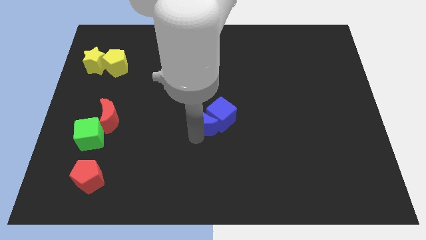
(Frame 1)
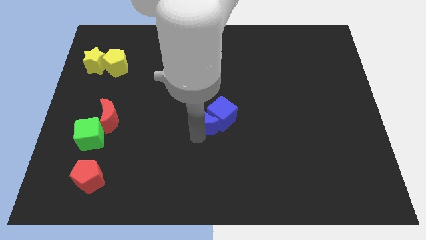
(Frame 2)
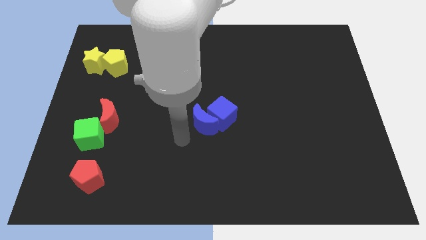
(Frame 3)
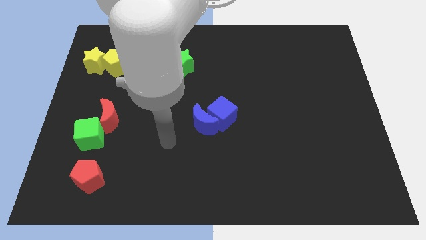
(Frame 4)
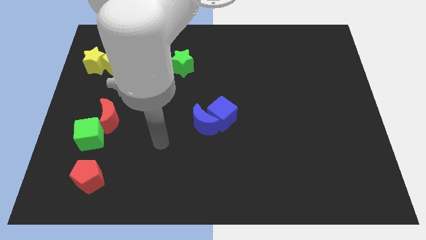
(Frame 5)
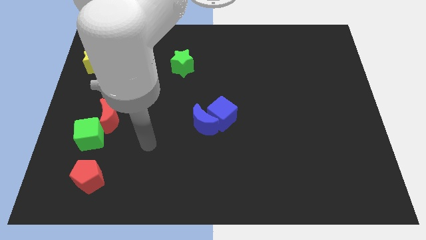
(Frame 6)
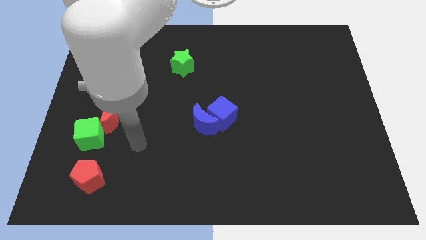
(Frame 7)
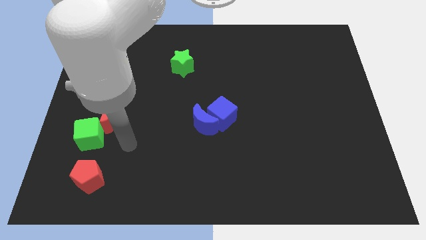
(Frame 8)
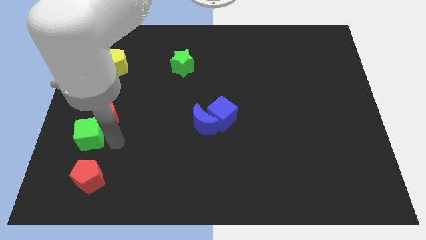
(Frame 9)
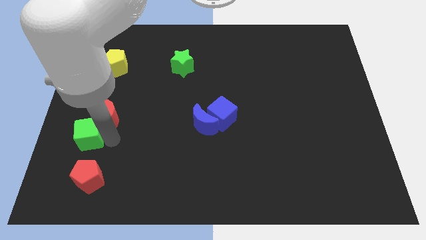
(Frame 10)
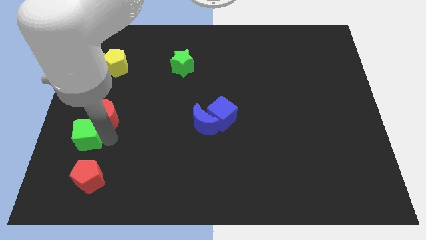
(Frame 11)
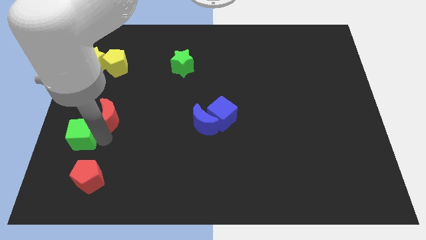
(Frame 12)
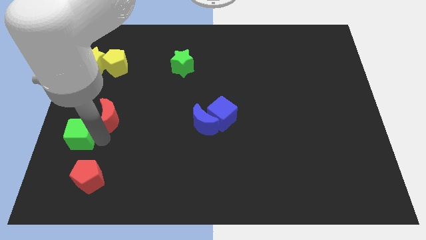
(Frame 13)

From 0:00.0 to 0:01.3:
slide the green cube towards the left side of the board

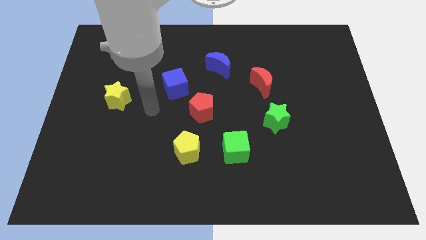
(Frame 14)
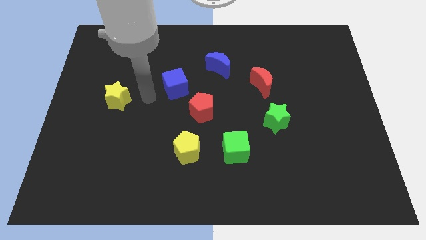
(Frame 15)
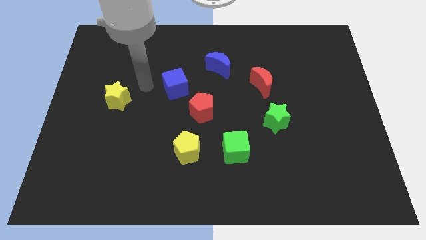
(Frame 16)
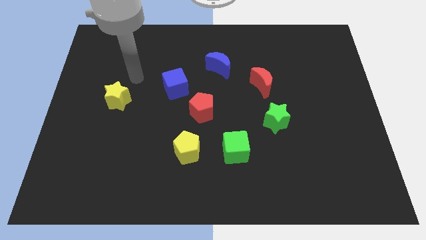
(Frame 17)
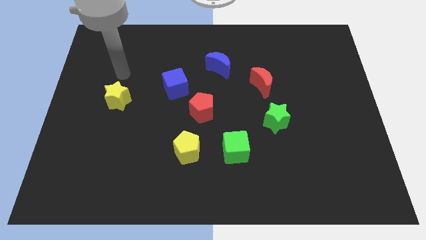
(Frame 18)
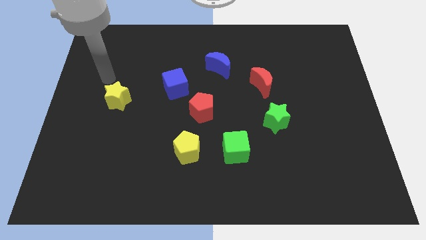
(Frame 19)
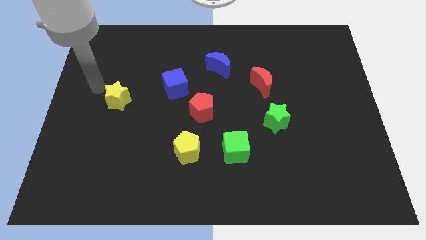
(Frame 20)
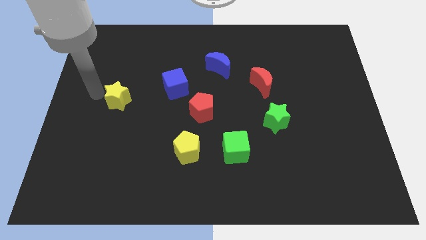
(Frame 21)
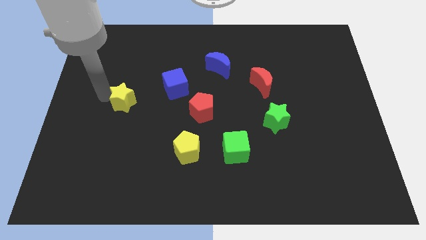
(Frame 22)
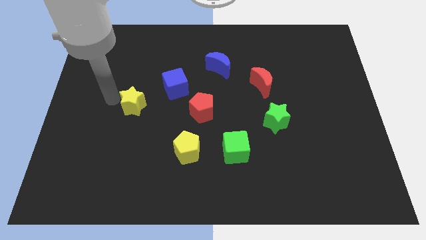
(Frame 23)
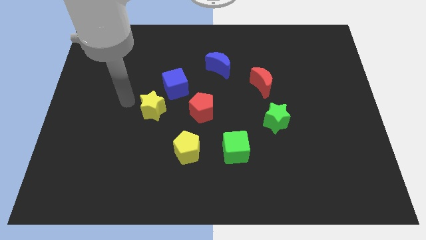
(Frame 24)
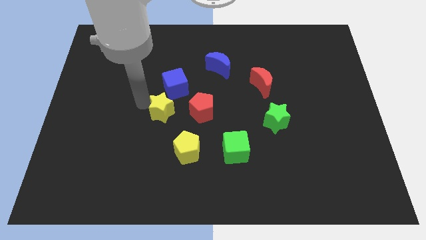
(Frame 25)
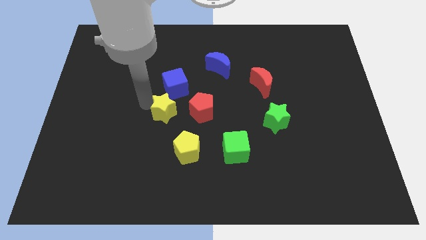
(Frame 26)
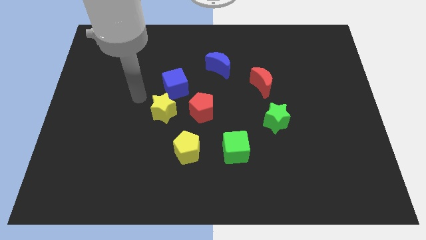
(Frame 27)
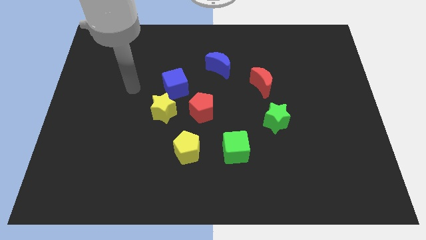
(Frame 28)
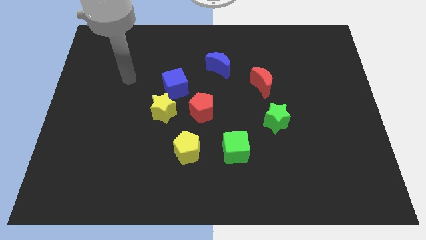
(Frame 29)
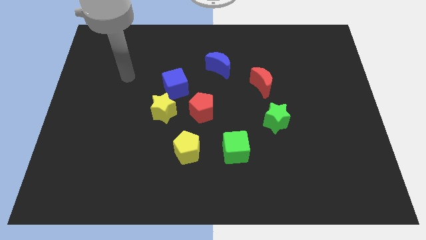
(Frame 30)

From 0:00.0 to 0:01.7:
place the yellow star at the bottom left of the blue cube

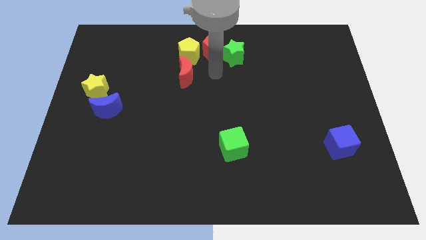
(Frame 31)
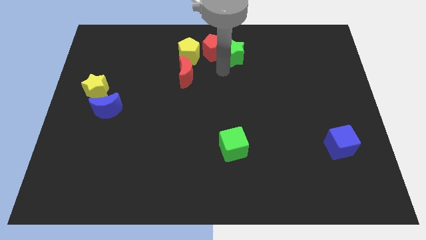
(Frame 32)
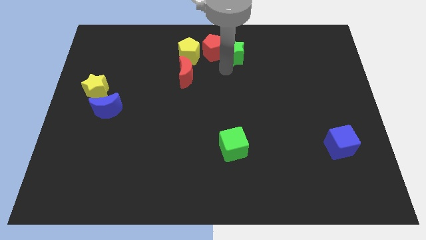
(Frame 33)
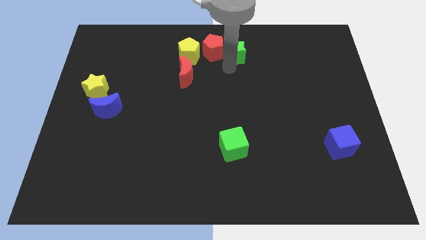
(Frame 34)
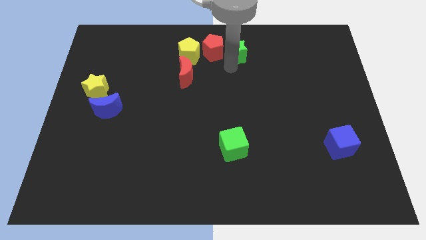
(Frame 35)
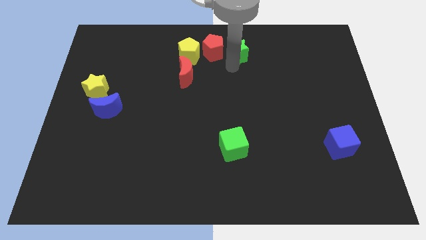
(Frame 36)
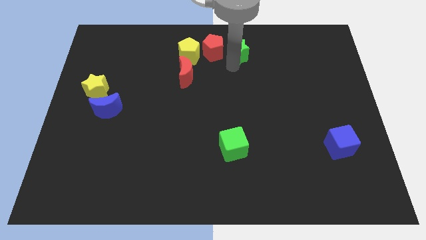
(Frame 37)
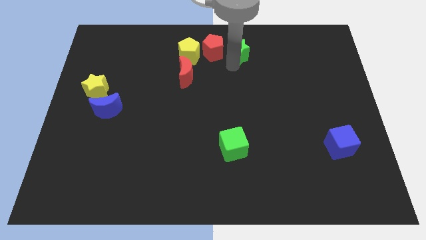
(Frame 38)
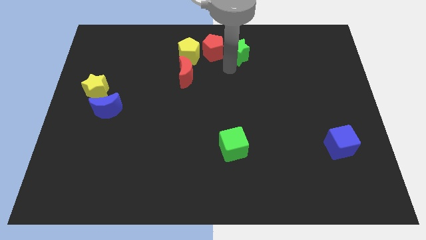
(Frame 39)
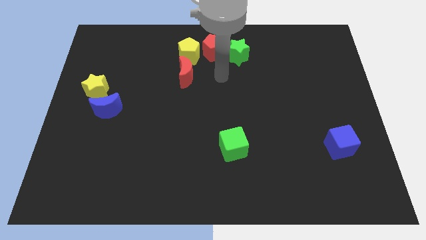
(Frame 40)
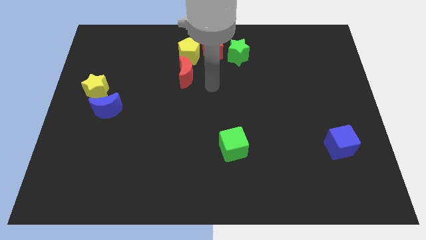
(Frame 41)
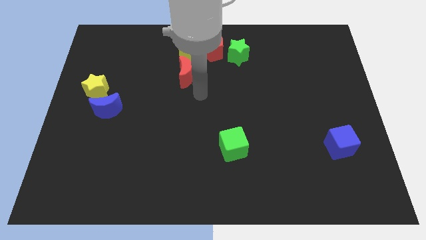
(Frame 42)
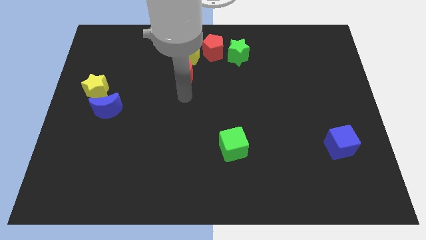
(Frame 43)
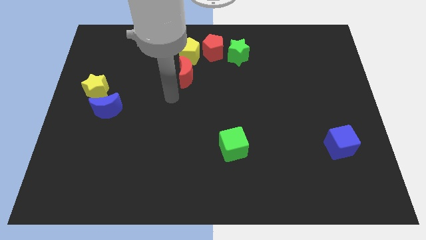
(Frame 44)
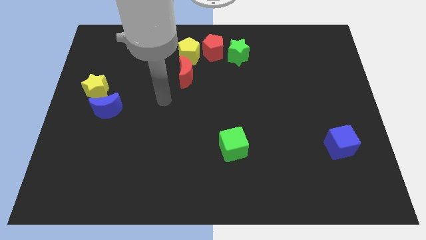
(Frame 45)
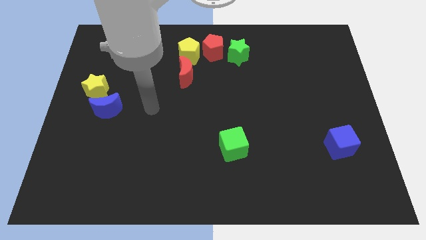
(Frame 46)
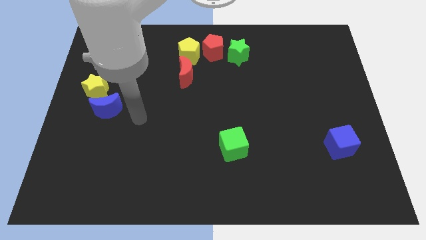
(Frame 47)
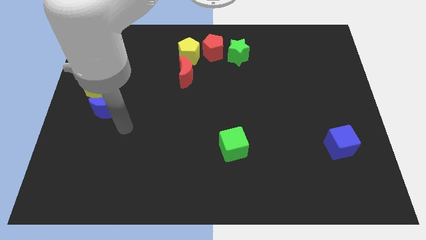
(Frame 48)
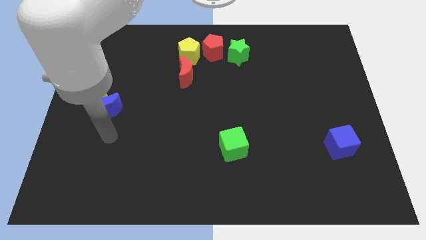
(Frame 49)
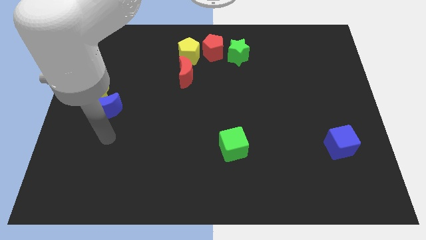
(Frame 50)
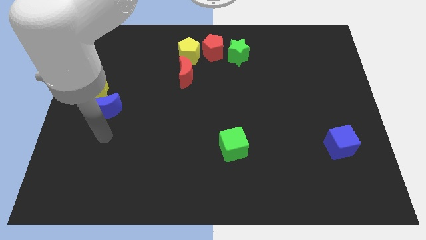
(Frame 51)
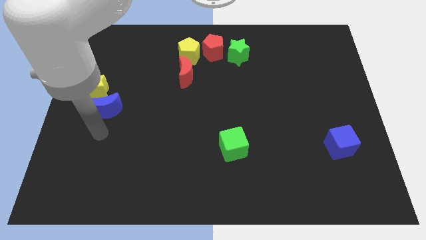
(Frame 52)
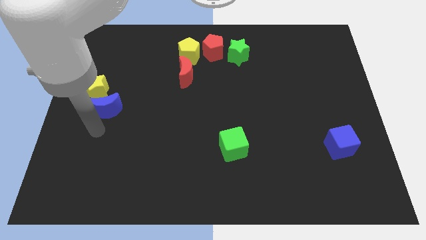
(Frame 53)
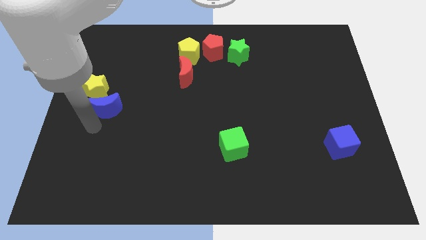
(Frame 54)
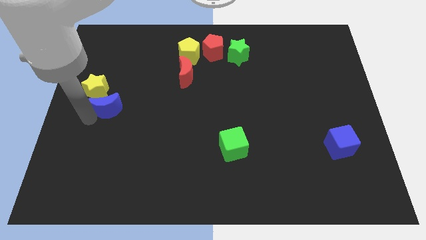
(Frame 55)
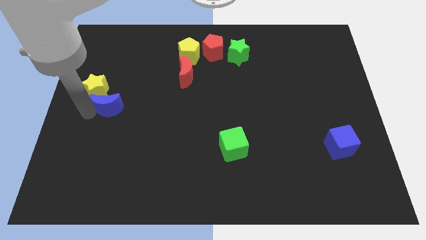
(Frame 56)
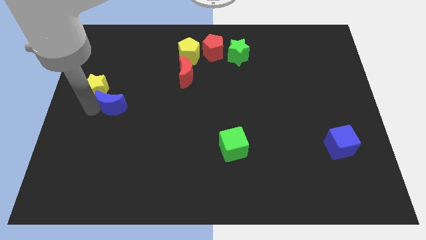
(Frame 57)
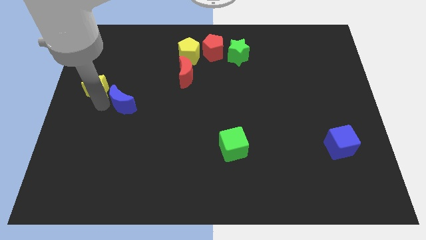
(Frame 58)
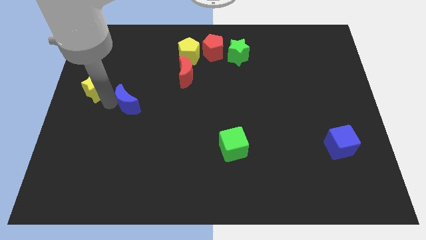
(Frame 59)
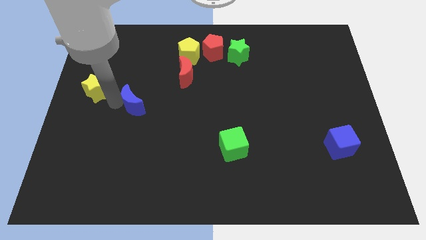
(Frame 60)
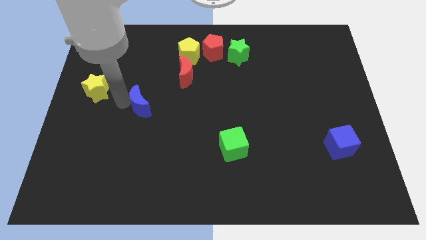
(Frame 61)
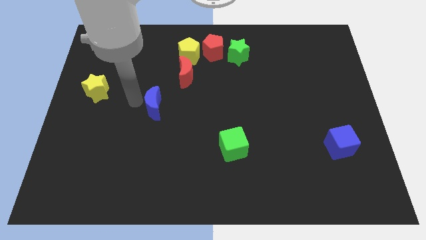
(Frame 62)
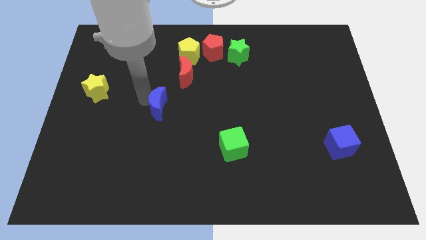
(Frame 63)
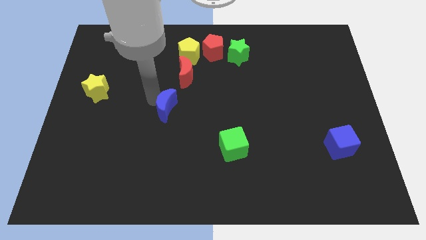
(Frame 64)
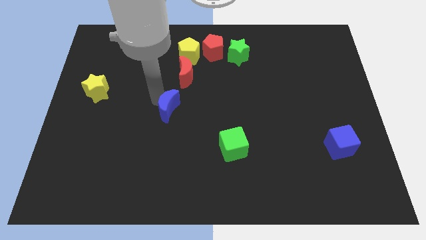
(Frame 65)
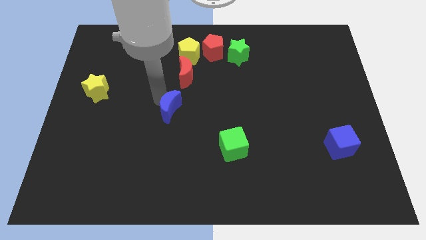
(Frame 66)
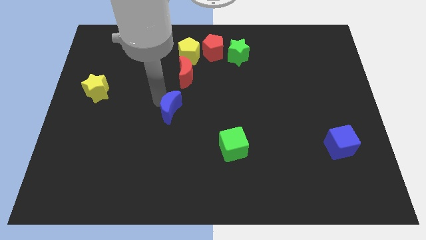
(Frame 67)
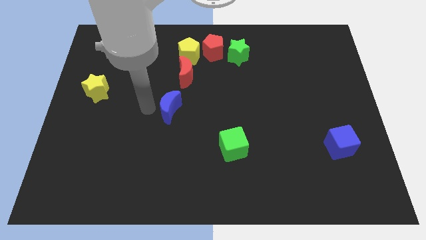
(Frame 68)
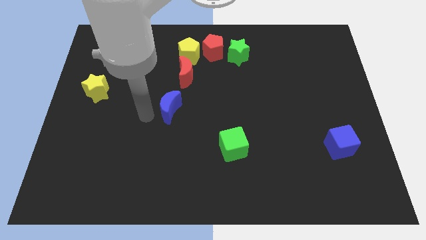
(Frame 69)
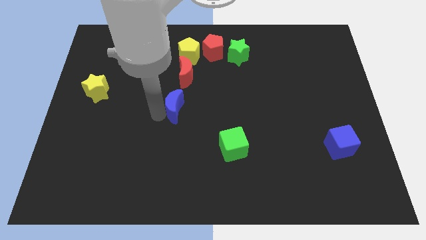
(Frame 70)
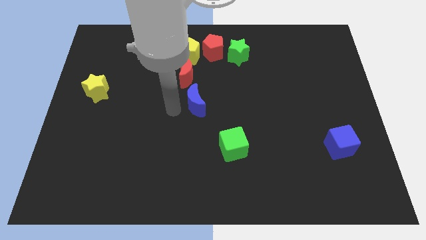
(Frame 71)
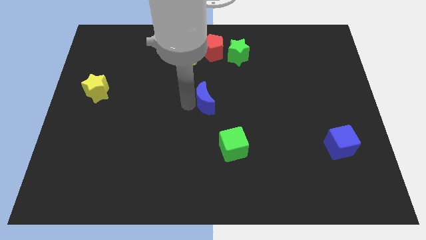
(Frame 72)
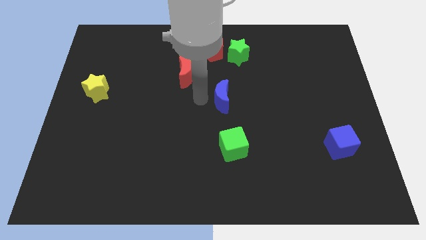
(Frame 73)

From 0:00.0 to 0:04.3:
separate the blue crescent from yellow star

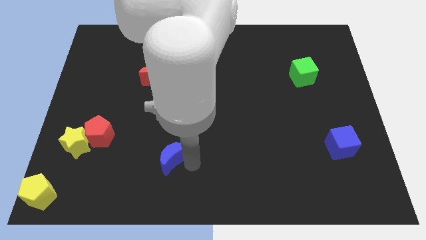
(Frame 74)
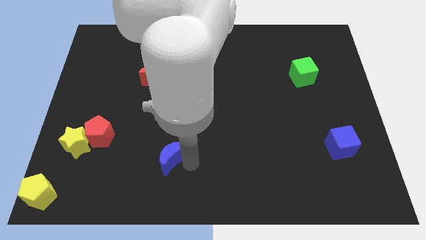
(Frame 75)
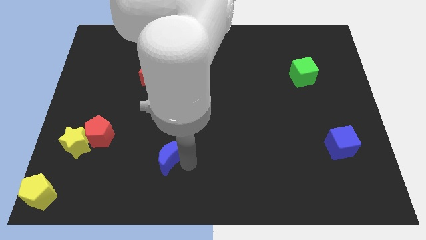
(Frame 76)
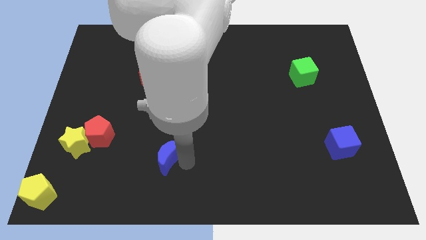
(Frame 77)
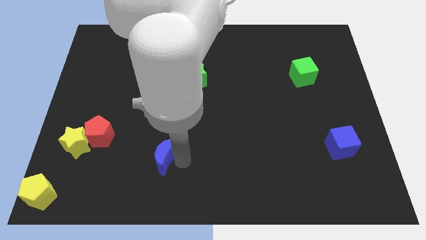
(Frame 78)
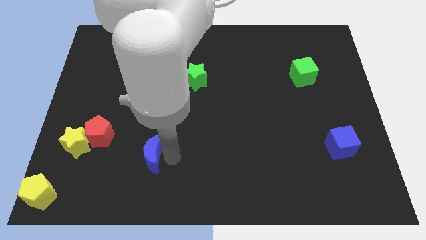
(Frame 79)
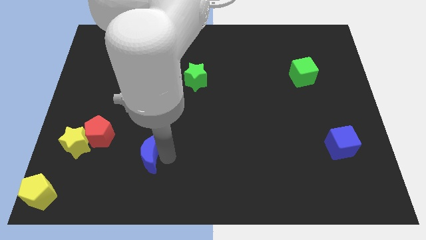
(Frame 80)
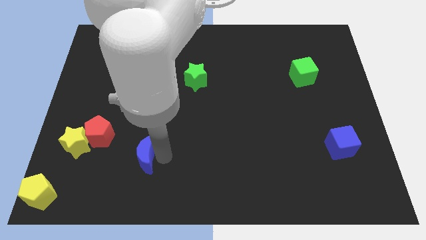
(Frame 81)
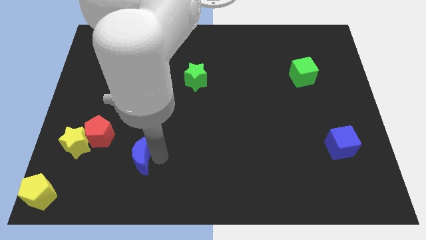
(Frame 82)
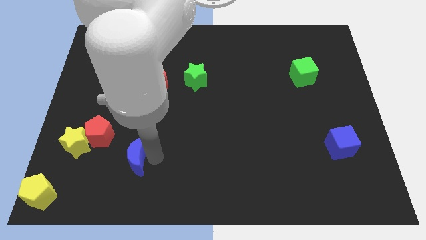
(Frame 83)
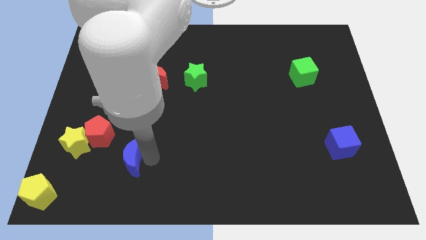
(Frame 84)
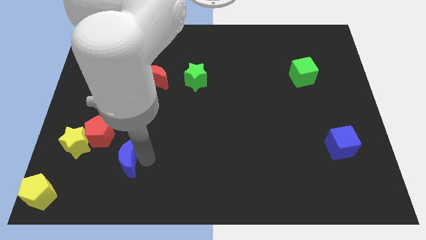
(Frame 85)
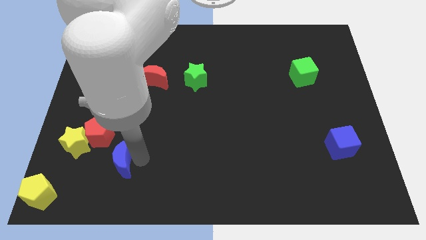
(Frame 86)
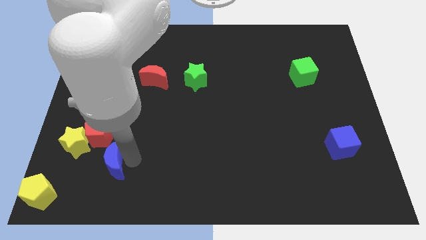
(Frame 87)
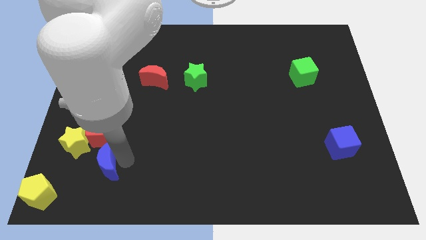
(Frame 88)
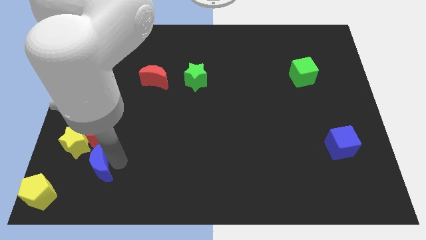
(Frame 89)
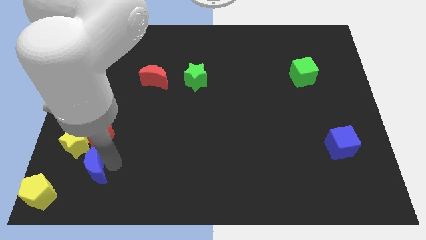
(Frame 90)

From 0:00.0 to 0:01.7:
push the blue crescent to the bottom left of the board
